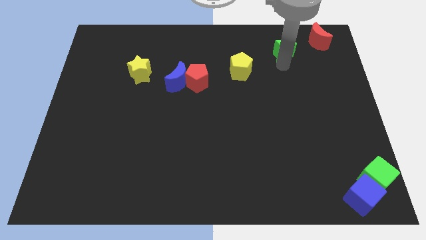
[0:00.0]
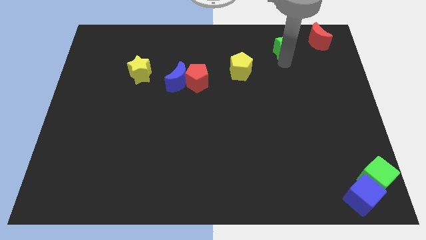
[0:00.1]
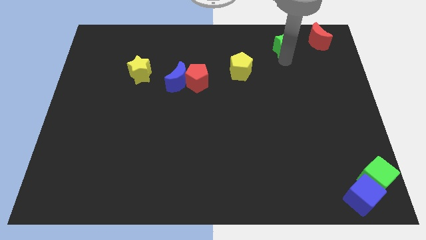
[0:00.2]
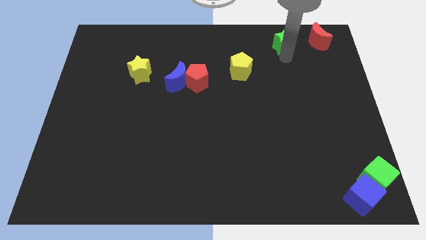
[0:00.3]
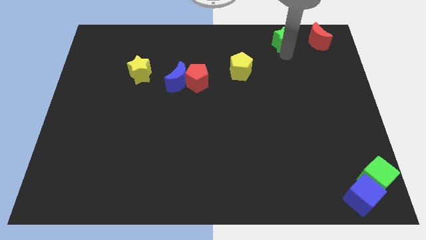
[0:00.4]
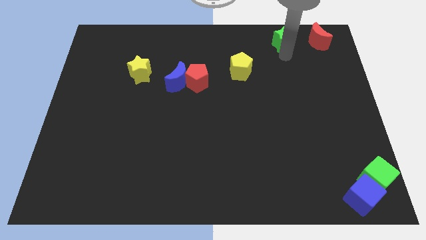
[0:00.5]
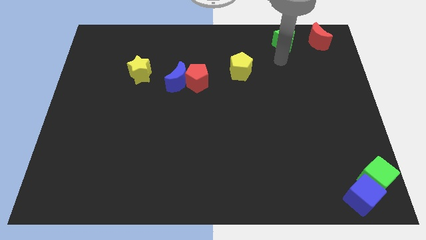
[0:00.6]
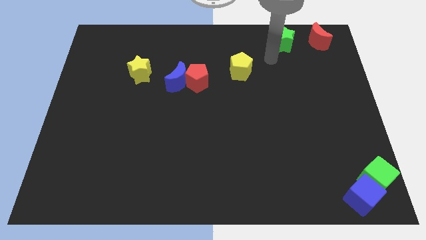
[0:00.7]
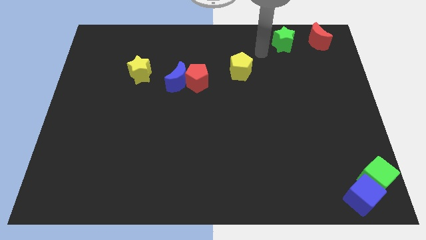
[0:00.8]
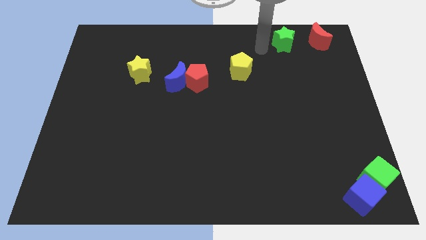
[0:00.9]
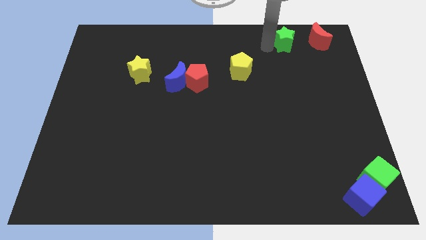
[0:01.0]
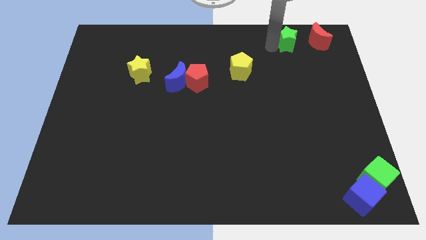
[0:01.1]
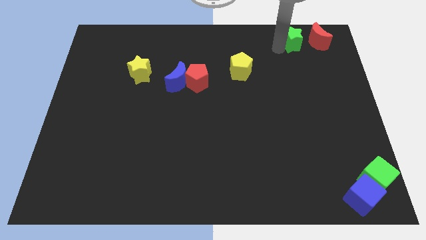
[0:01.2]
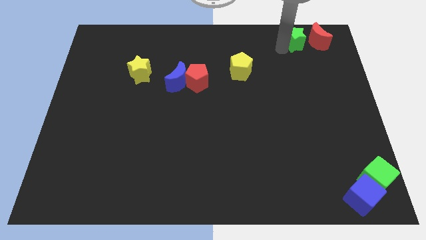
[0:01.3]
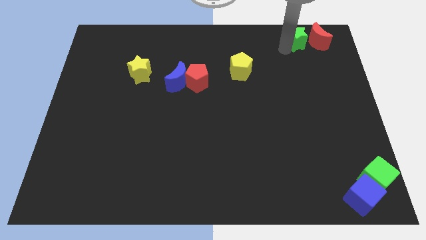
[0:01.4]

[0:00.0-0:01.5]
place the green star to the left of the red crescent

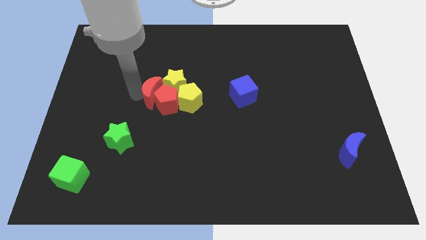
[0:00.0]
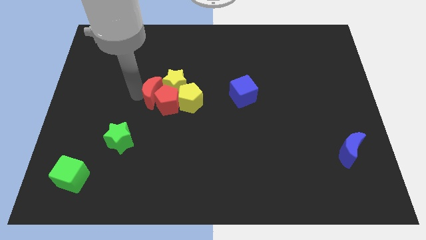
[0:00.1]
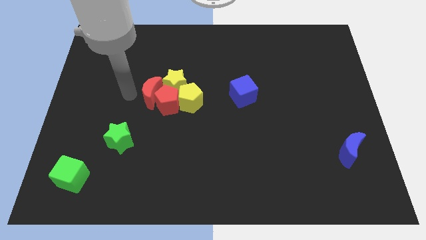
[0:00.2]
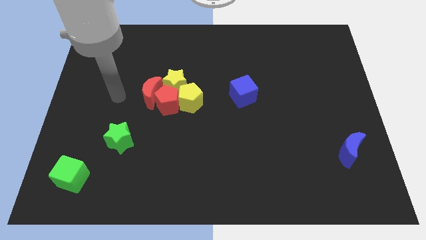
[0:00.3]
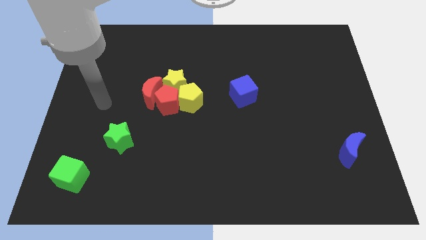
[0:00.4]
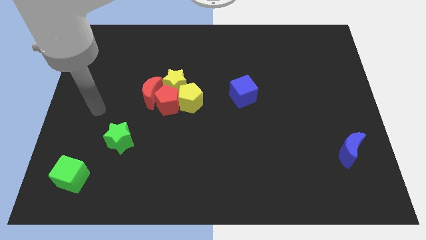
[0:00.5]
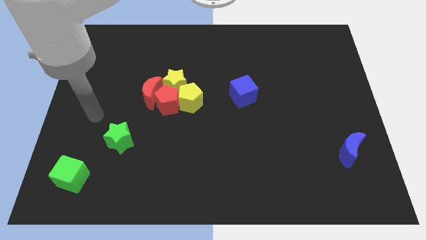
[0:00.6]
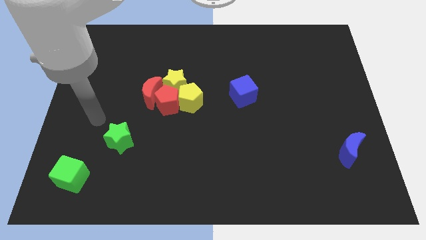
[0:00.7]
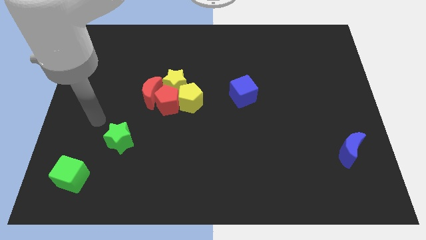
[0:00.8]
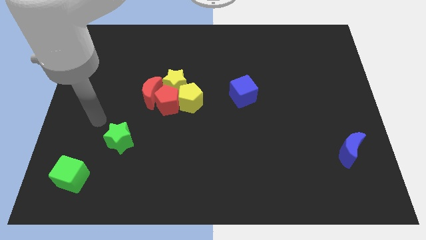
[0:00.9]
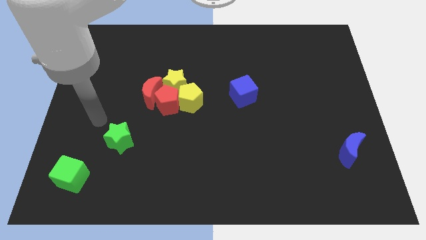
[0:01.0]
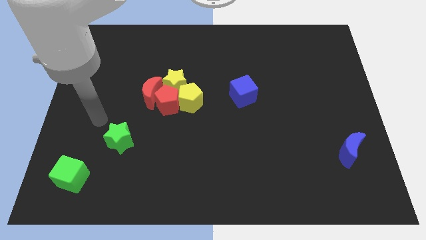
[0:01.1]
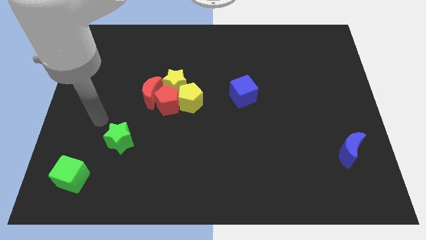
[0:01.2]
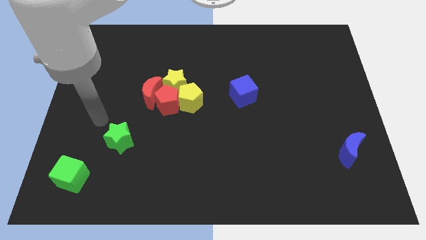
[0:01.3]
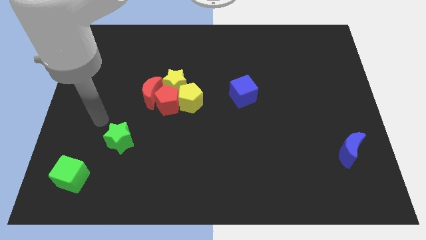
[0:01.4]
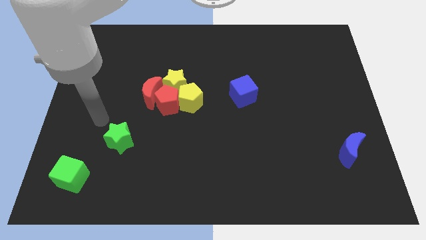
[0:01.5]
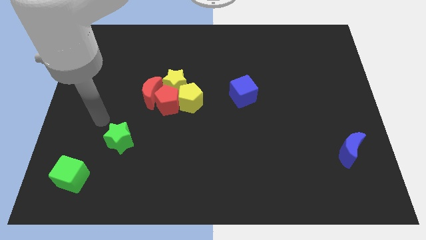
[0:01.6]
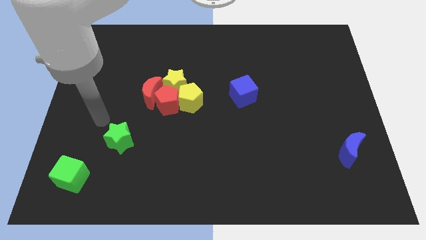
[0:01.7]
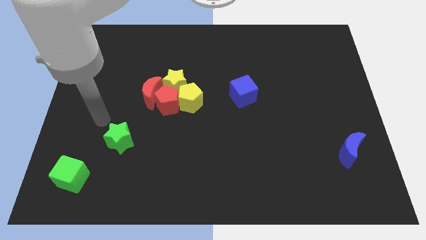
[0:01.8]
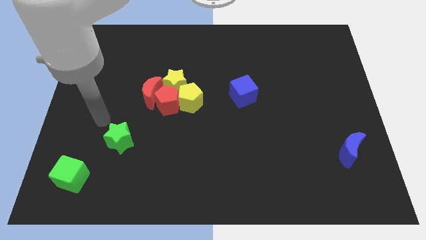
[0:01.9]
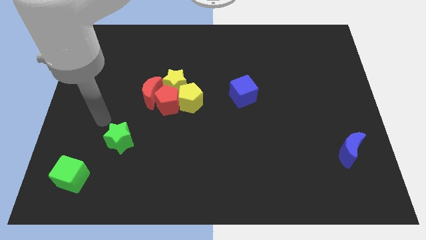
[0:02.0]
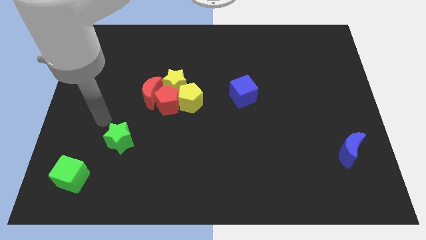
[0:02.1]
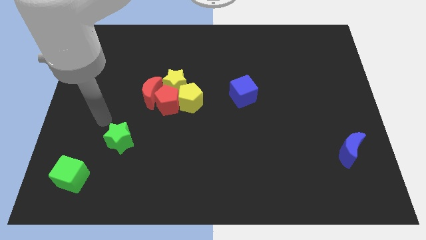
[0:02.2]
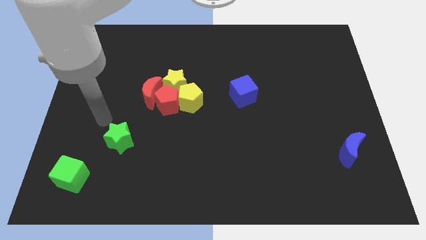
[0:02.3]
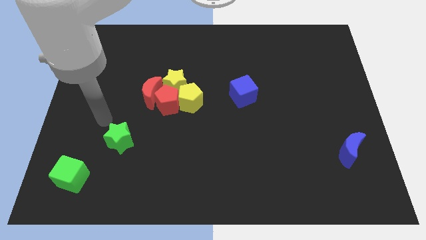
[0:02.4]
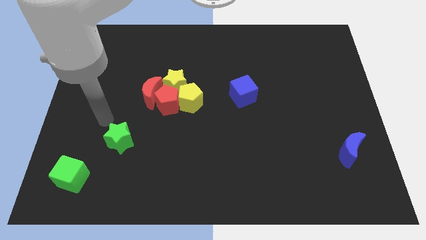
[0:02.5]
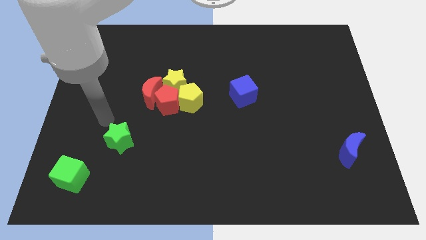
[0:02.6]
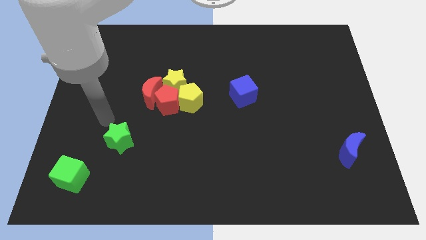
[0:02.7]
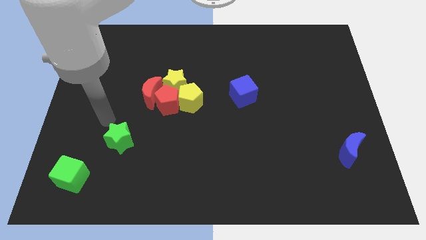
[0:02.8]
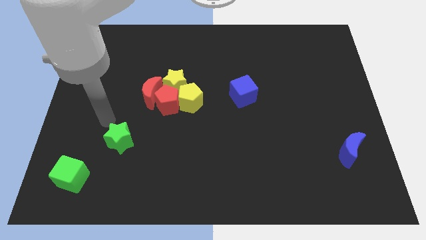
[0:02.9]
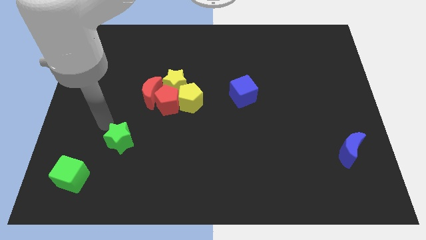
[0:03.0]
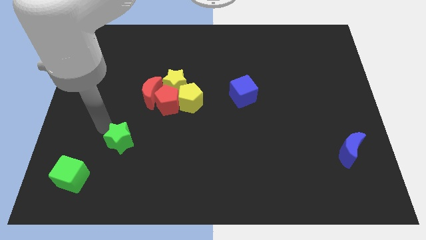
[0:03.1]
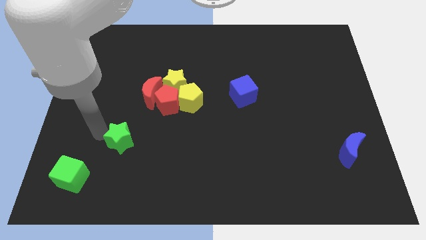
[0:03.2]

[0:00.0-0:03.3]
move your arm away from the red crescent

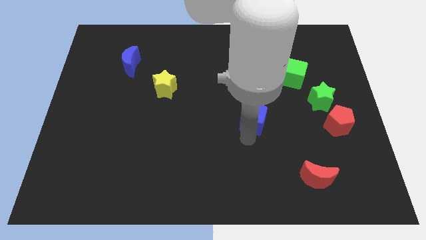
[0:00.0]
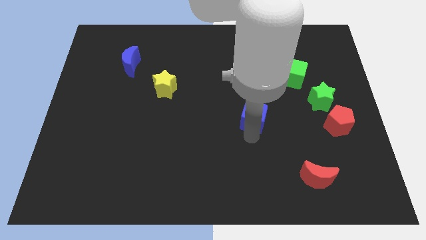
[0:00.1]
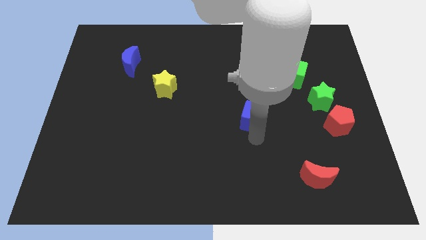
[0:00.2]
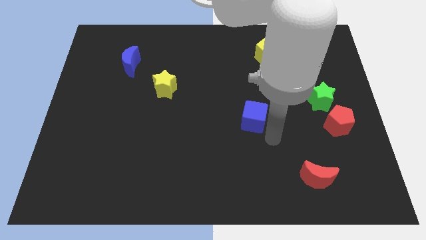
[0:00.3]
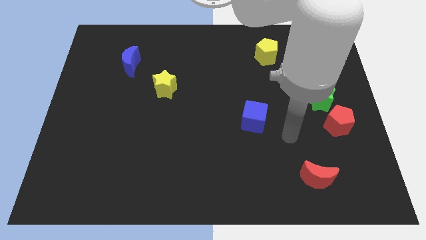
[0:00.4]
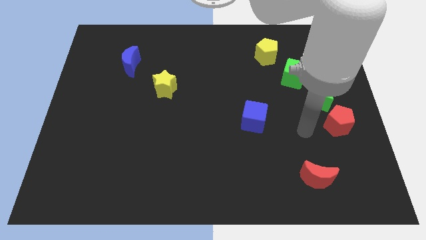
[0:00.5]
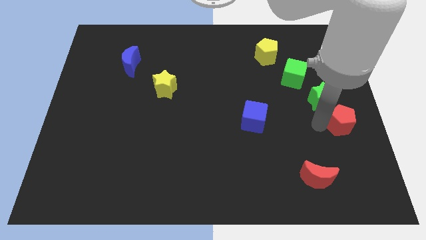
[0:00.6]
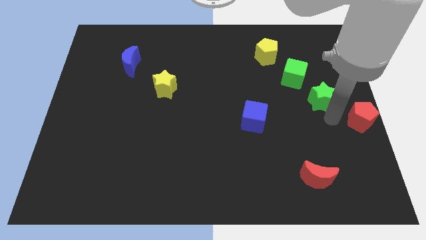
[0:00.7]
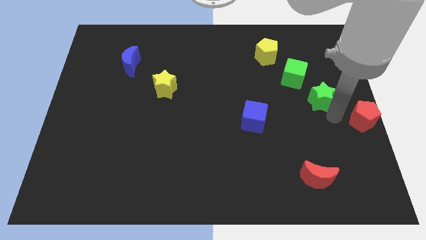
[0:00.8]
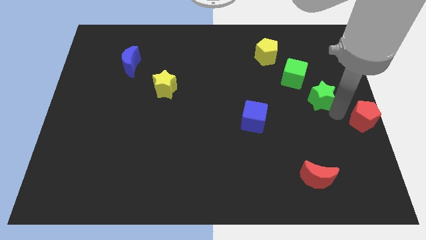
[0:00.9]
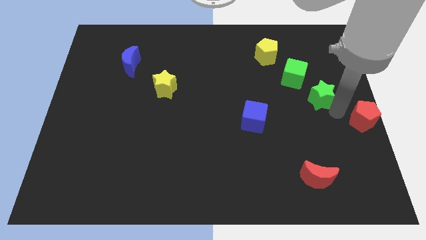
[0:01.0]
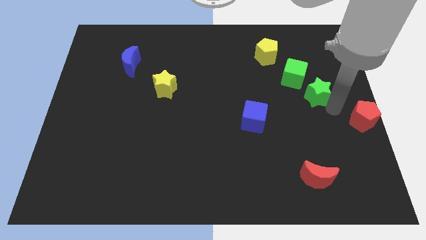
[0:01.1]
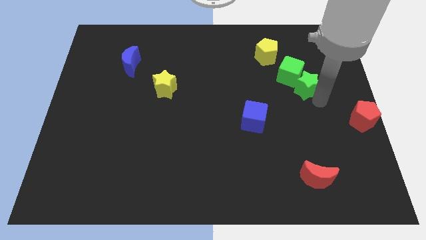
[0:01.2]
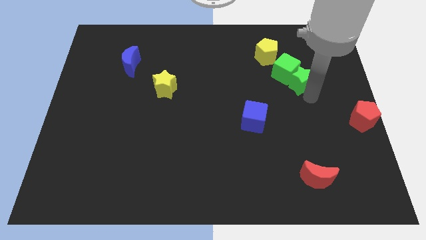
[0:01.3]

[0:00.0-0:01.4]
push the green star into the green cube

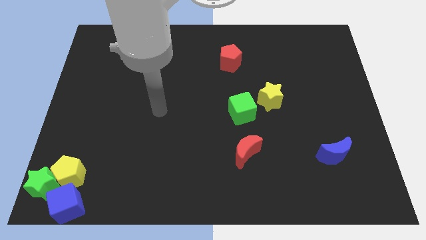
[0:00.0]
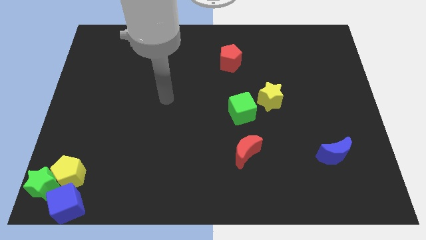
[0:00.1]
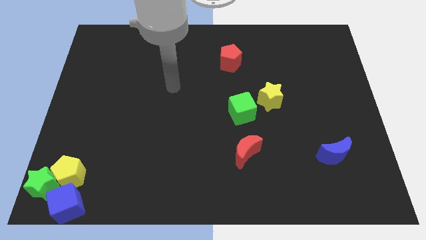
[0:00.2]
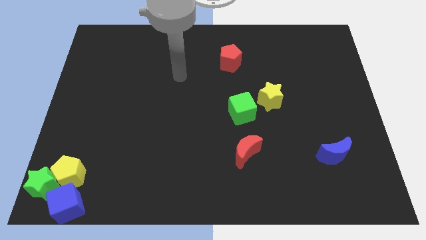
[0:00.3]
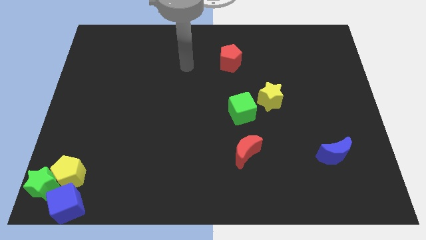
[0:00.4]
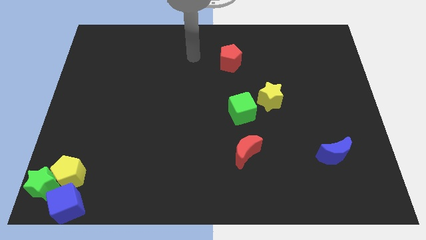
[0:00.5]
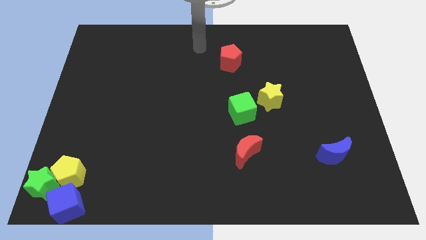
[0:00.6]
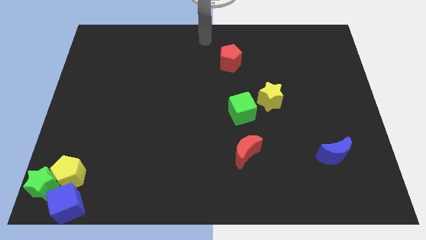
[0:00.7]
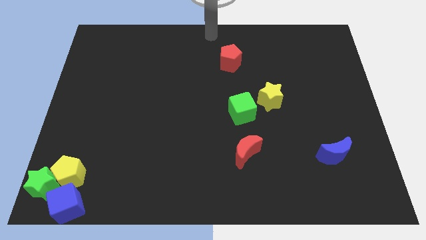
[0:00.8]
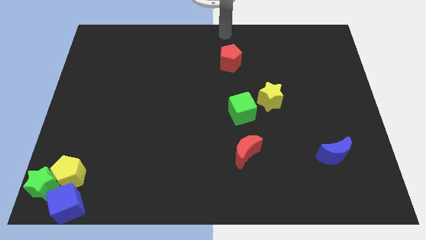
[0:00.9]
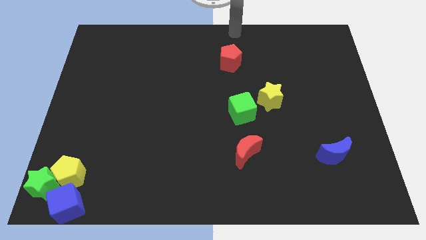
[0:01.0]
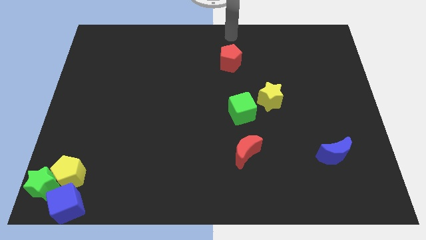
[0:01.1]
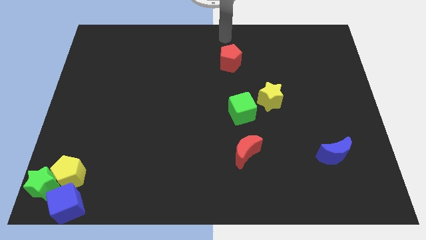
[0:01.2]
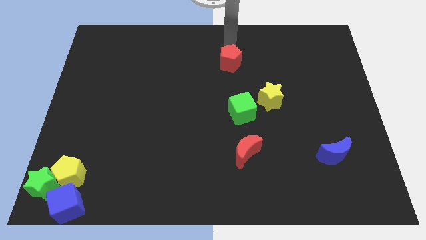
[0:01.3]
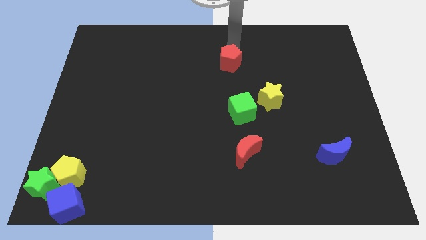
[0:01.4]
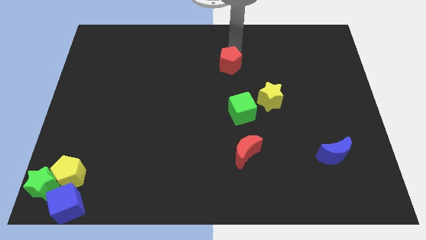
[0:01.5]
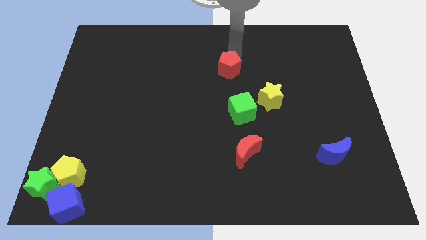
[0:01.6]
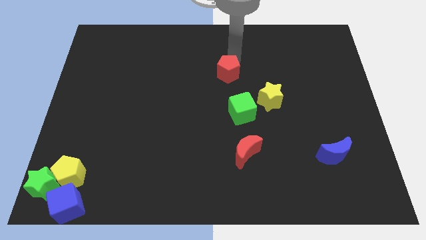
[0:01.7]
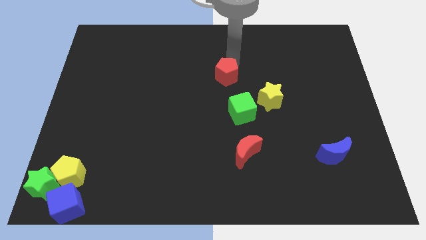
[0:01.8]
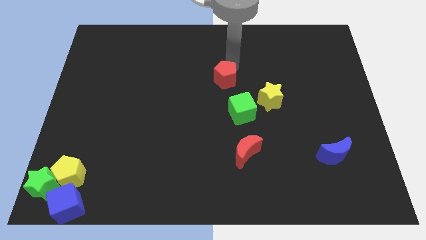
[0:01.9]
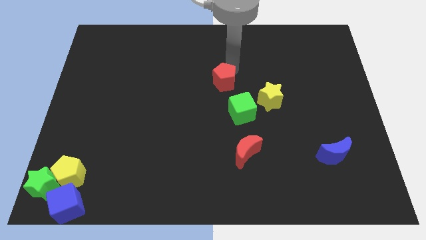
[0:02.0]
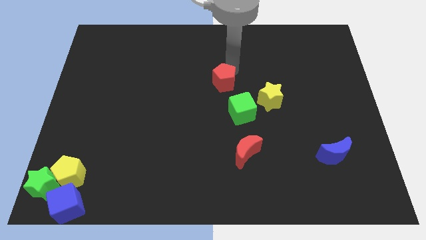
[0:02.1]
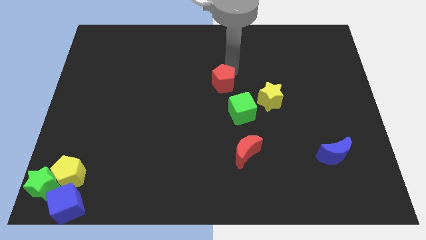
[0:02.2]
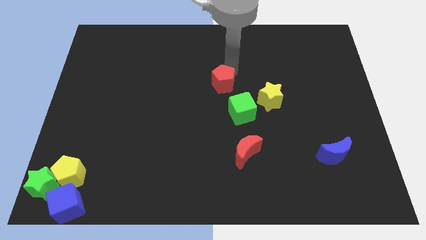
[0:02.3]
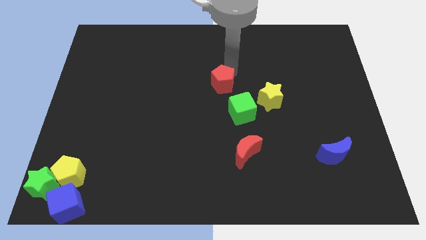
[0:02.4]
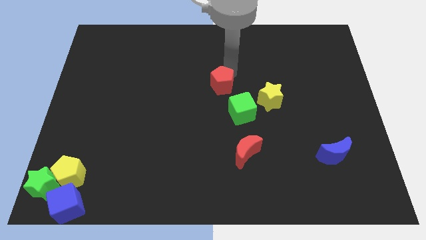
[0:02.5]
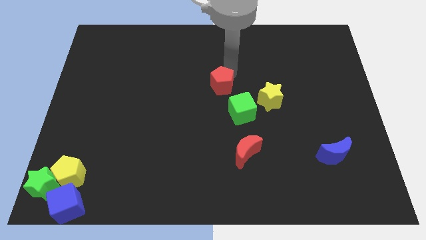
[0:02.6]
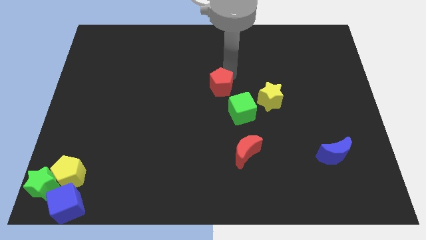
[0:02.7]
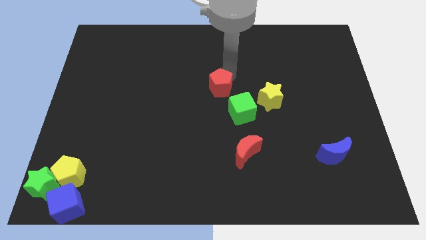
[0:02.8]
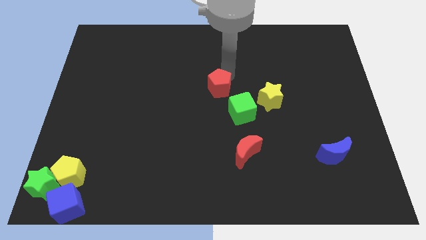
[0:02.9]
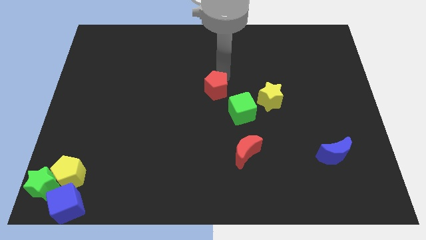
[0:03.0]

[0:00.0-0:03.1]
slide red pentagon towards center
